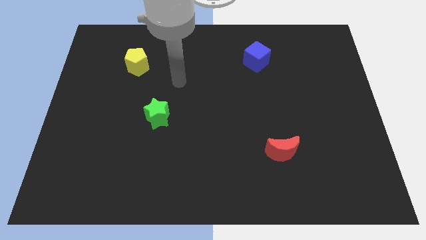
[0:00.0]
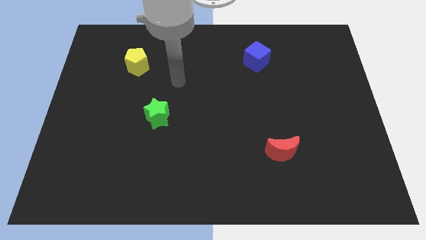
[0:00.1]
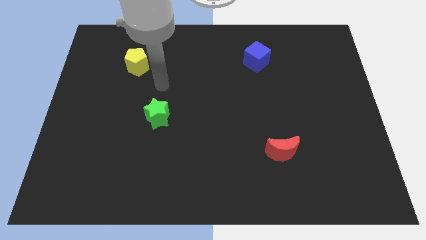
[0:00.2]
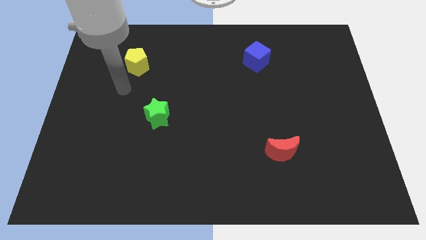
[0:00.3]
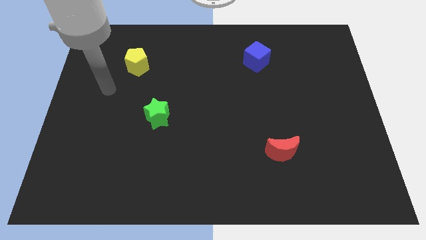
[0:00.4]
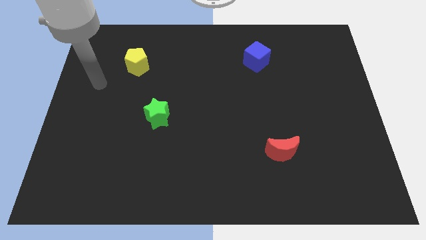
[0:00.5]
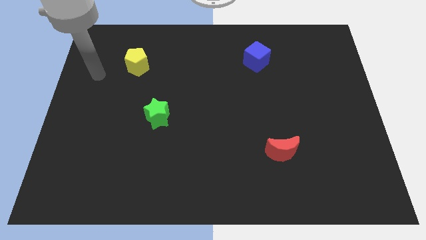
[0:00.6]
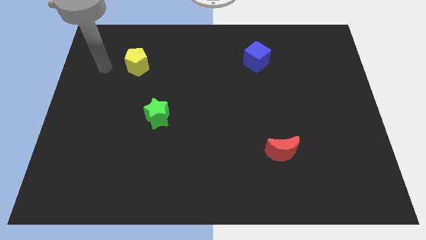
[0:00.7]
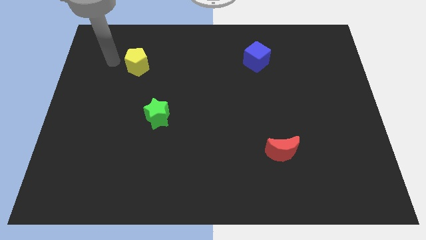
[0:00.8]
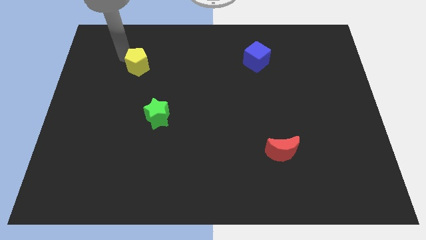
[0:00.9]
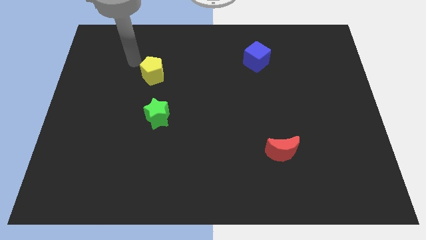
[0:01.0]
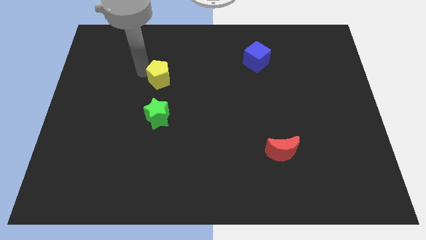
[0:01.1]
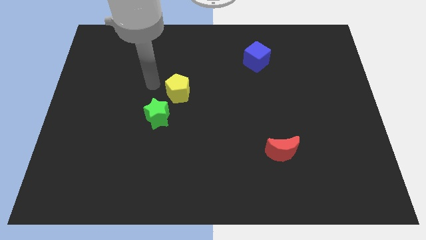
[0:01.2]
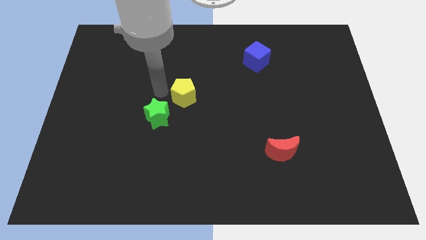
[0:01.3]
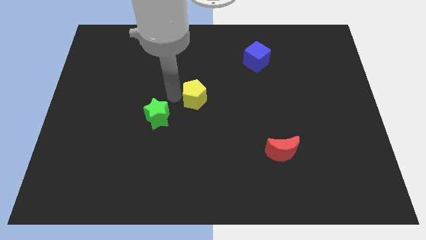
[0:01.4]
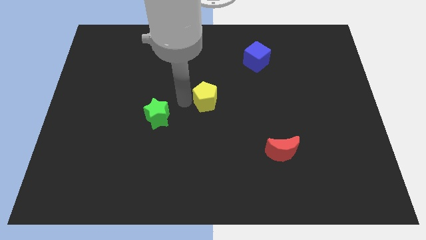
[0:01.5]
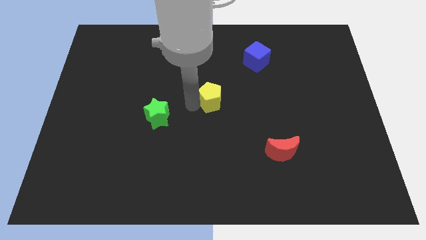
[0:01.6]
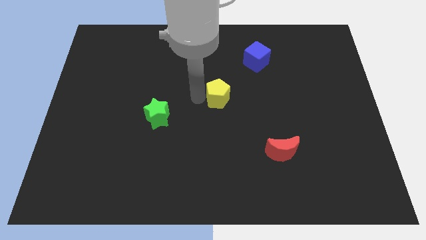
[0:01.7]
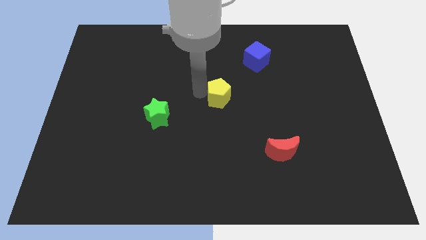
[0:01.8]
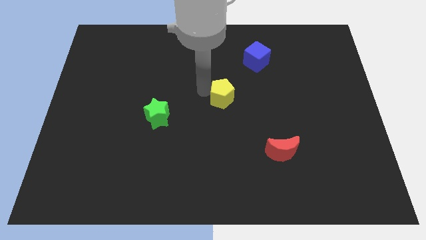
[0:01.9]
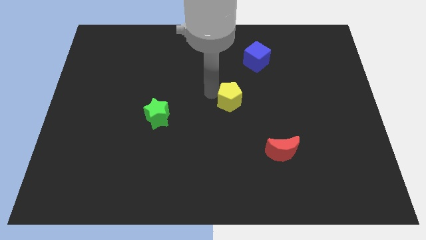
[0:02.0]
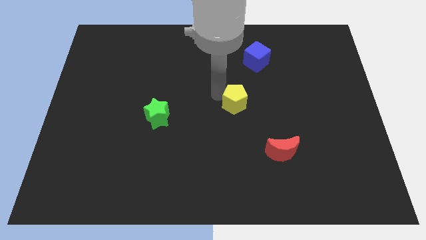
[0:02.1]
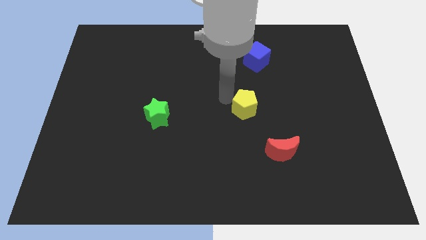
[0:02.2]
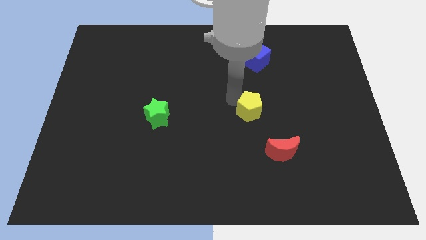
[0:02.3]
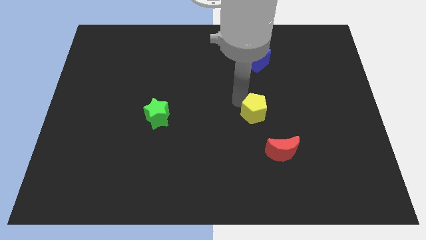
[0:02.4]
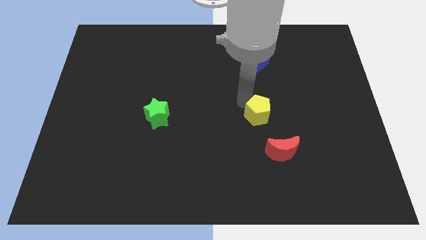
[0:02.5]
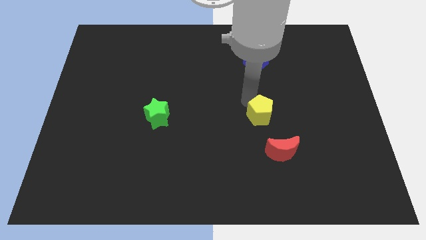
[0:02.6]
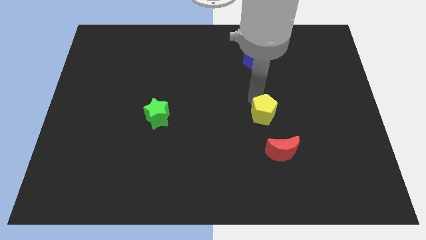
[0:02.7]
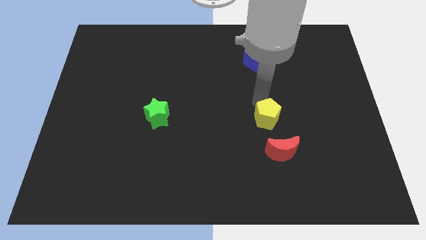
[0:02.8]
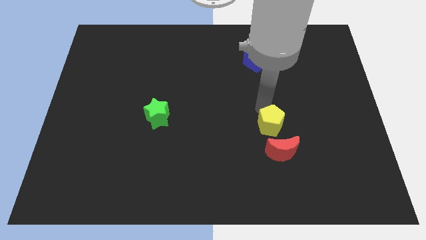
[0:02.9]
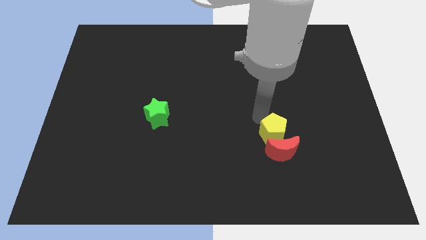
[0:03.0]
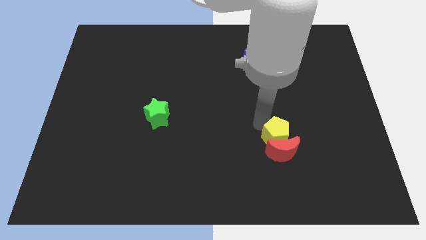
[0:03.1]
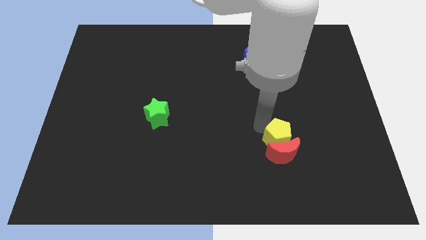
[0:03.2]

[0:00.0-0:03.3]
put the yellow block next to the red block

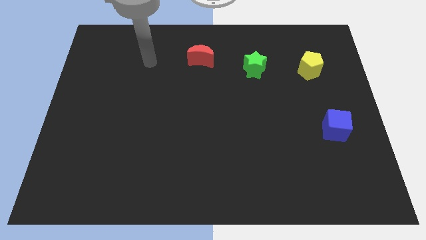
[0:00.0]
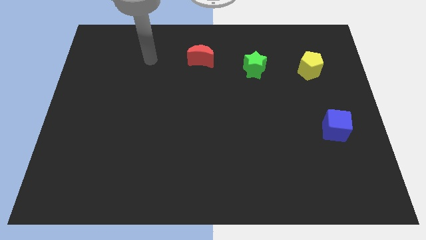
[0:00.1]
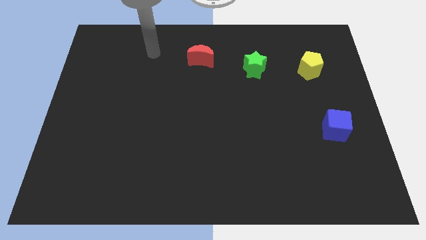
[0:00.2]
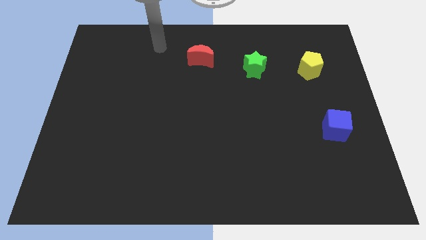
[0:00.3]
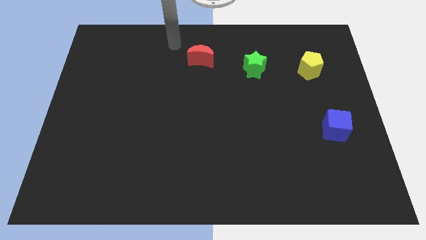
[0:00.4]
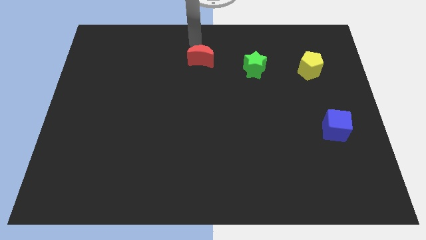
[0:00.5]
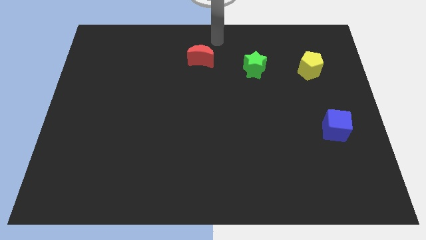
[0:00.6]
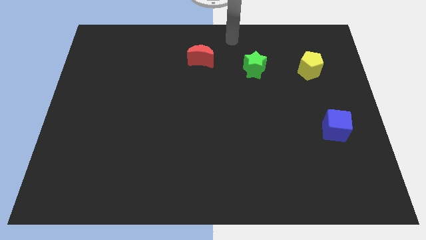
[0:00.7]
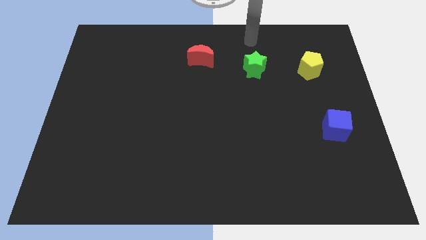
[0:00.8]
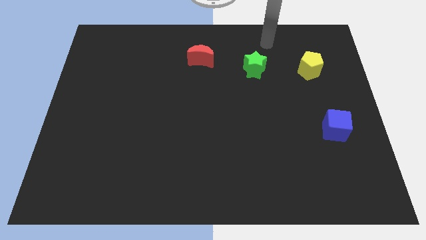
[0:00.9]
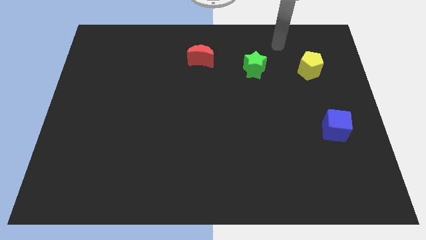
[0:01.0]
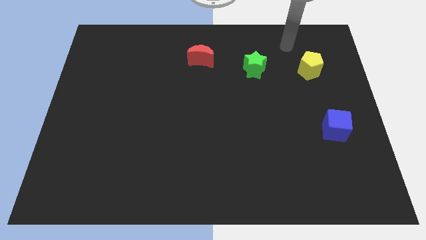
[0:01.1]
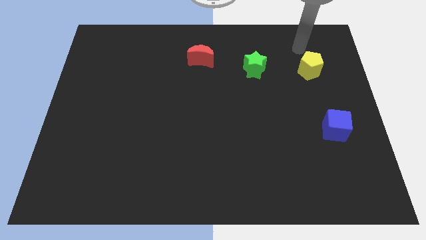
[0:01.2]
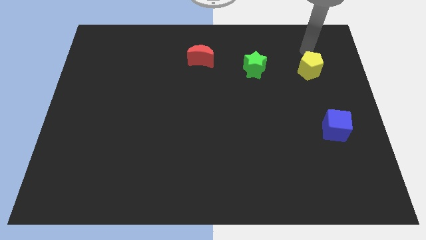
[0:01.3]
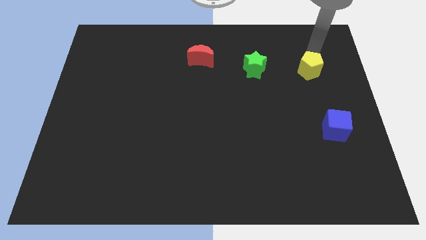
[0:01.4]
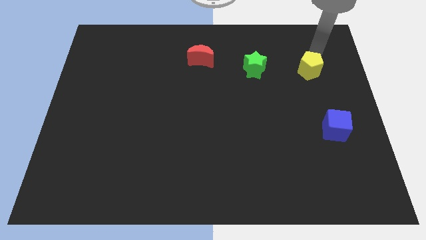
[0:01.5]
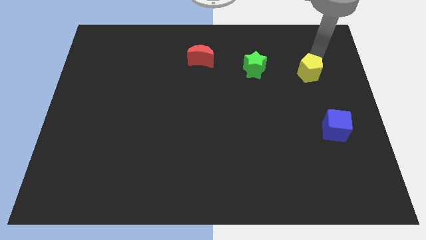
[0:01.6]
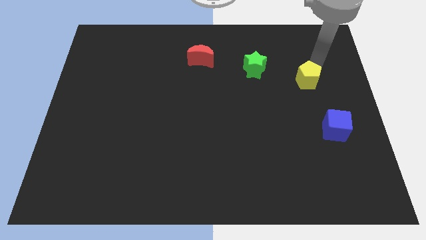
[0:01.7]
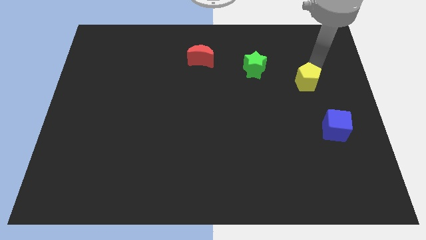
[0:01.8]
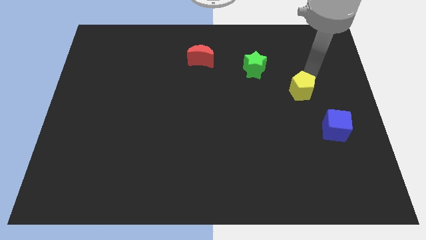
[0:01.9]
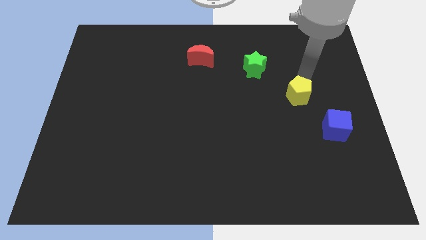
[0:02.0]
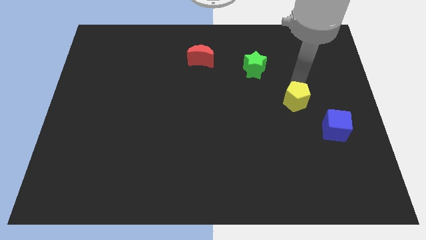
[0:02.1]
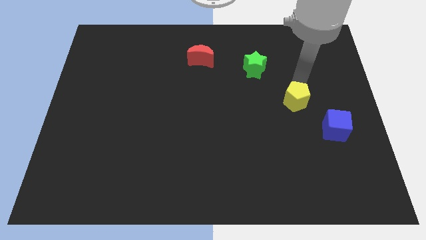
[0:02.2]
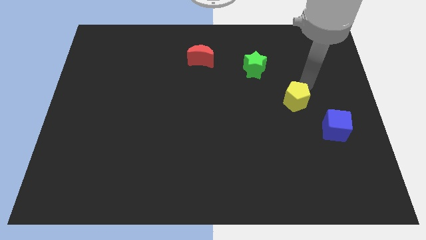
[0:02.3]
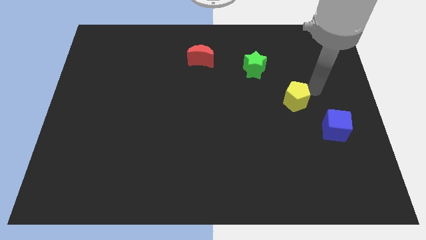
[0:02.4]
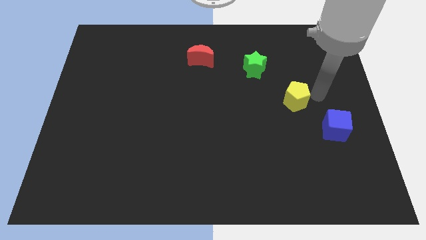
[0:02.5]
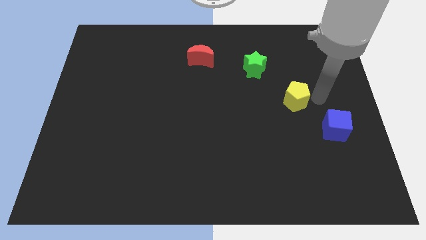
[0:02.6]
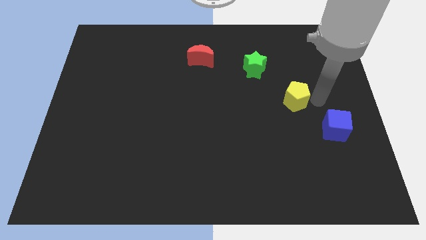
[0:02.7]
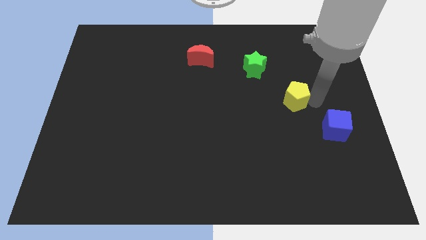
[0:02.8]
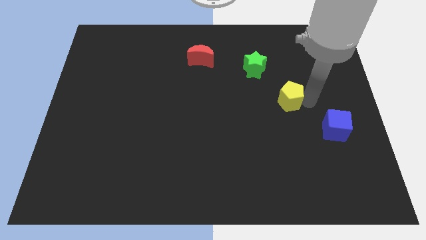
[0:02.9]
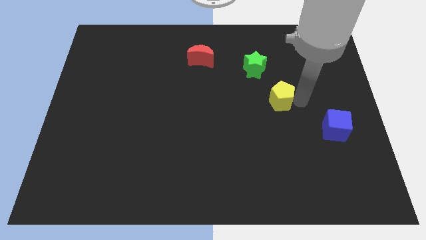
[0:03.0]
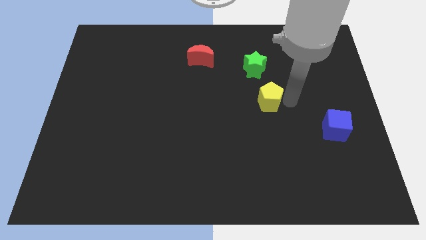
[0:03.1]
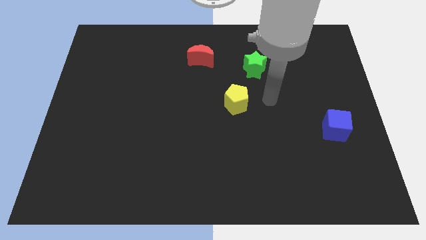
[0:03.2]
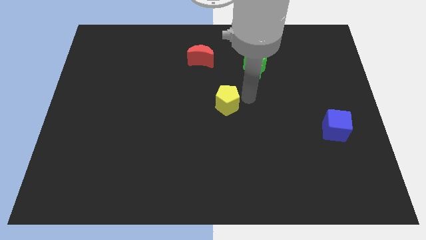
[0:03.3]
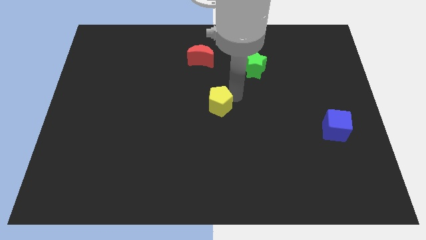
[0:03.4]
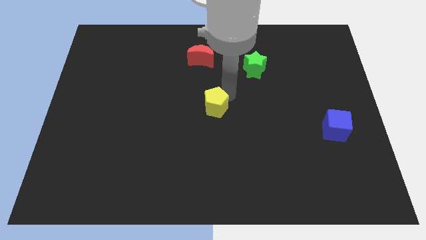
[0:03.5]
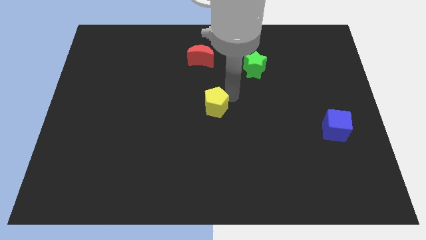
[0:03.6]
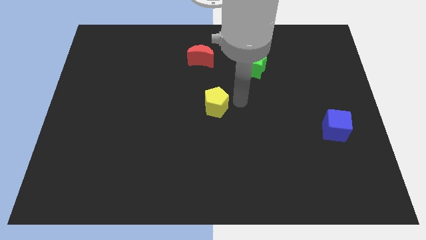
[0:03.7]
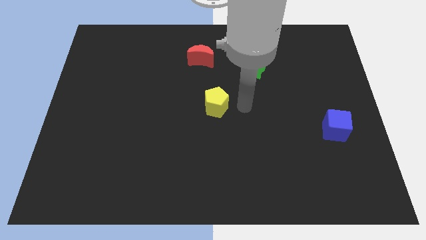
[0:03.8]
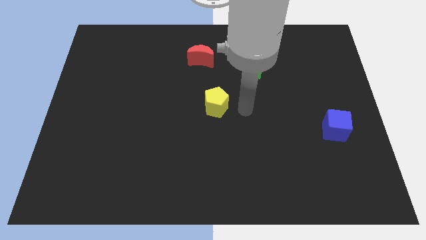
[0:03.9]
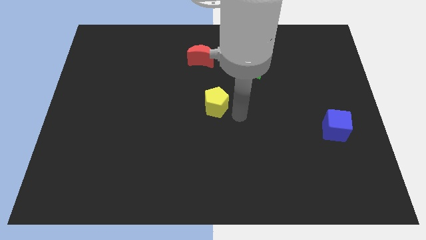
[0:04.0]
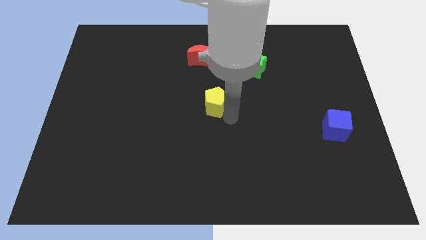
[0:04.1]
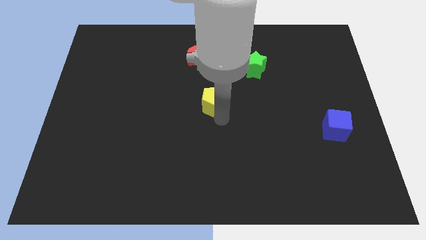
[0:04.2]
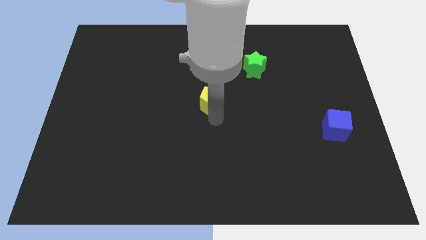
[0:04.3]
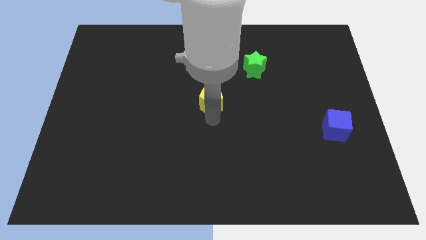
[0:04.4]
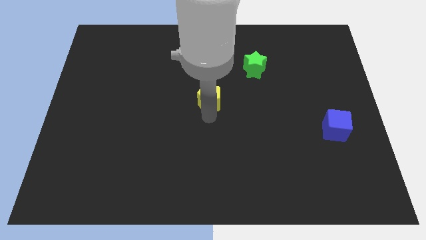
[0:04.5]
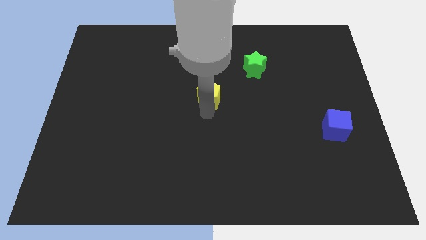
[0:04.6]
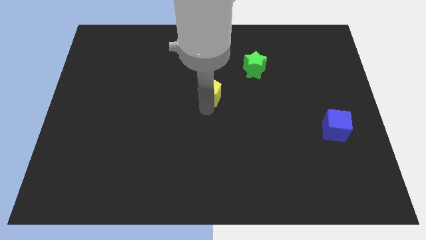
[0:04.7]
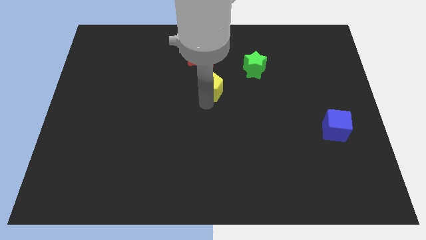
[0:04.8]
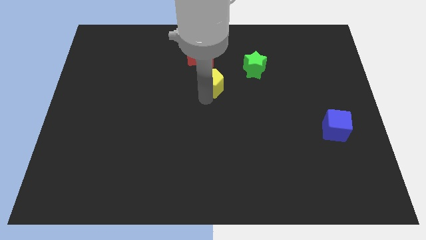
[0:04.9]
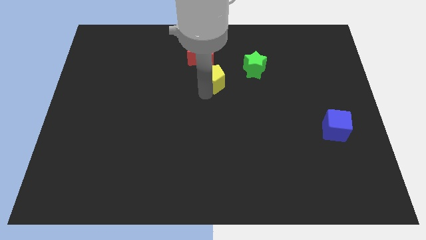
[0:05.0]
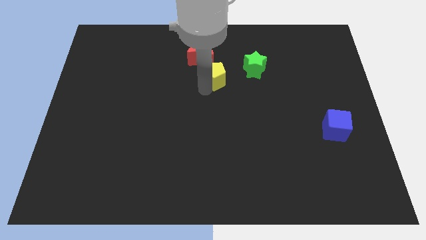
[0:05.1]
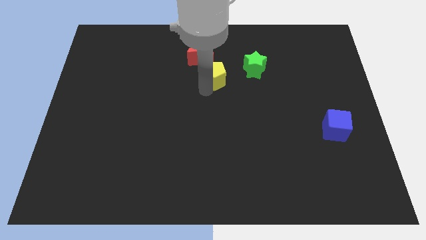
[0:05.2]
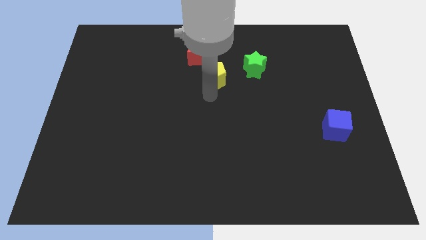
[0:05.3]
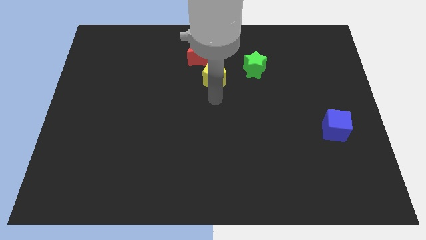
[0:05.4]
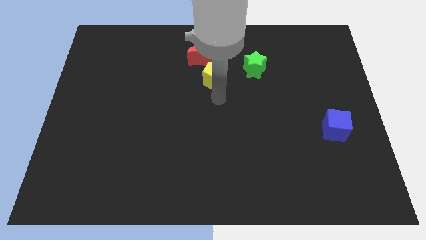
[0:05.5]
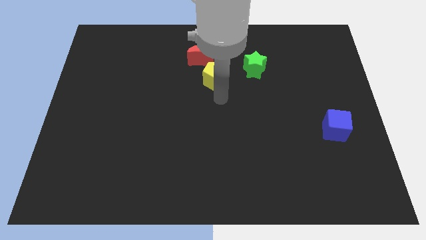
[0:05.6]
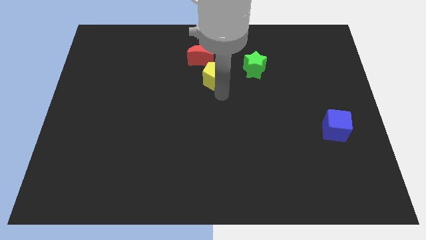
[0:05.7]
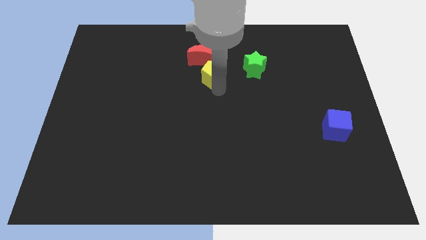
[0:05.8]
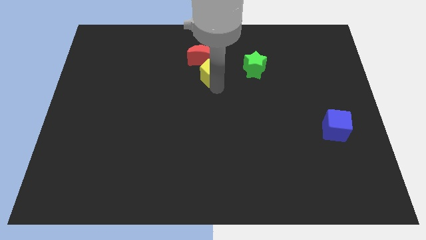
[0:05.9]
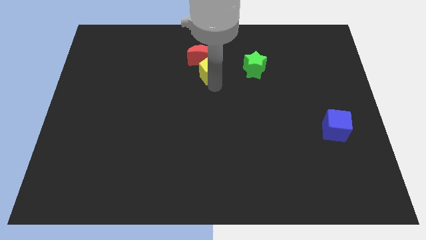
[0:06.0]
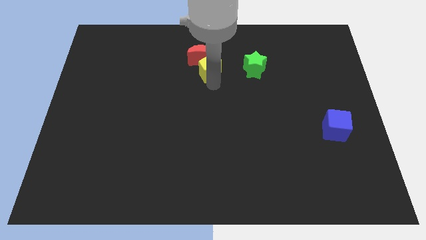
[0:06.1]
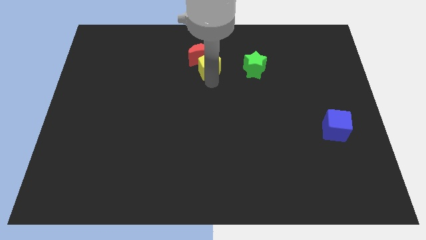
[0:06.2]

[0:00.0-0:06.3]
put the yellow block to the red block
